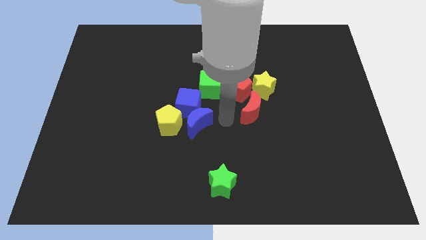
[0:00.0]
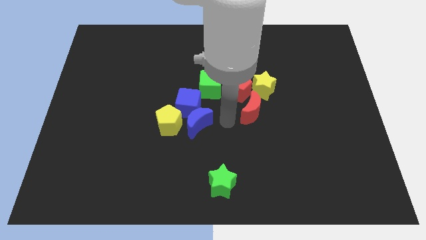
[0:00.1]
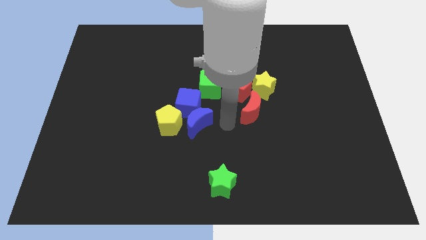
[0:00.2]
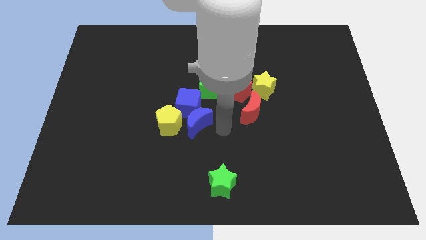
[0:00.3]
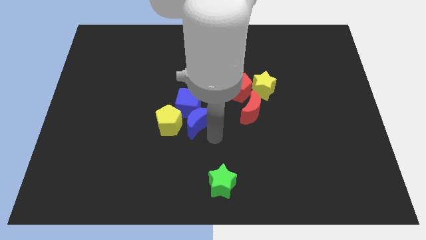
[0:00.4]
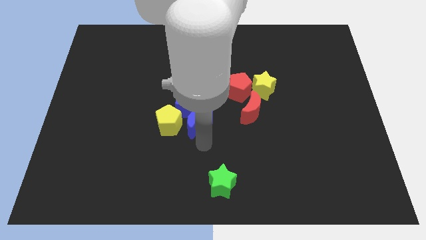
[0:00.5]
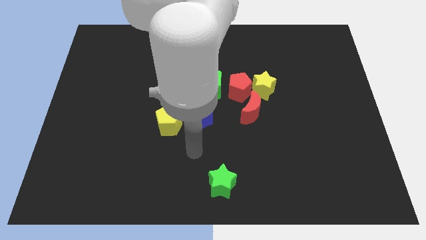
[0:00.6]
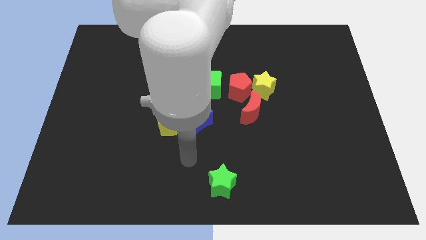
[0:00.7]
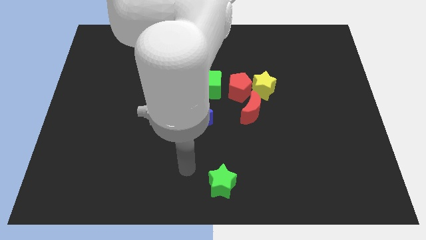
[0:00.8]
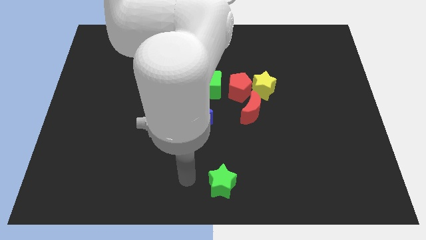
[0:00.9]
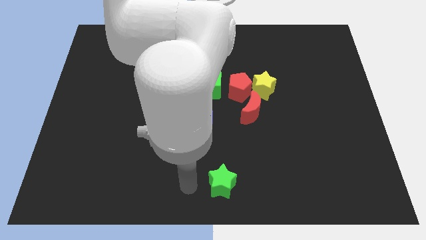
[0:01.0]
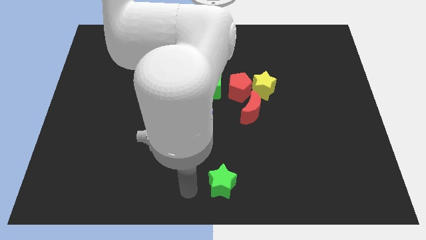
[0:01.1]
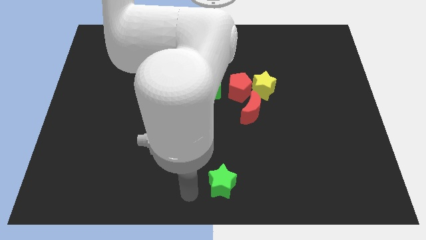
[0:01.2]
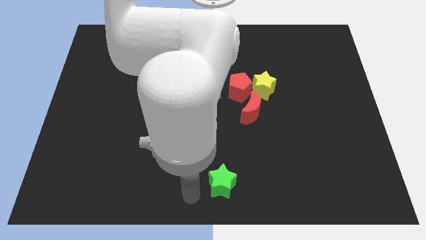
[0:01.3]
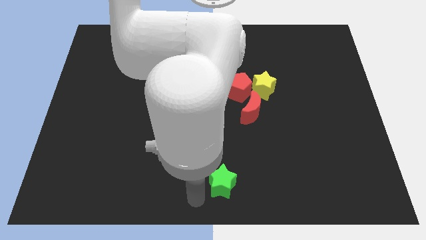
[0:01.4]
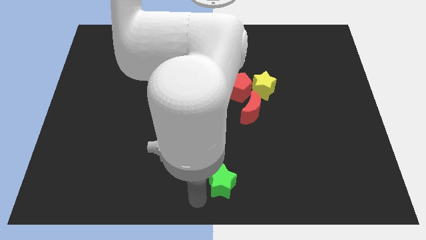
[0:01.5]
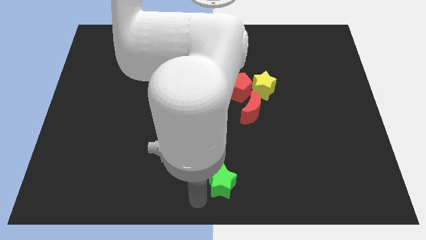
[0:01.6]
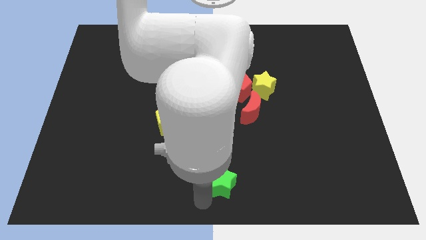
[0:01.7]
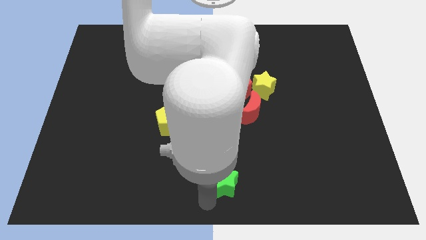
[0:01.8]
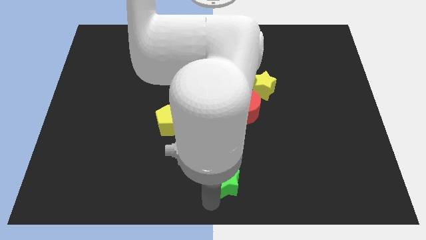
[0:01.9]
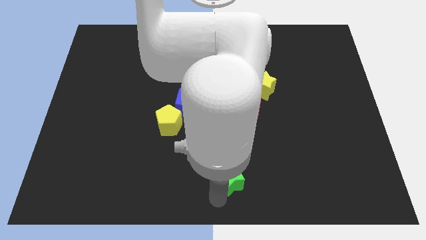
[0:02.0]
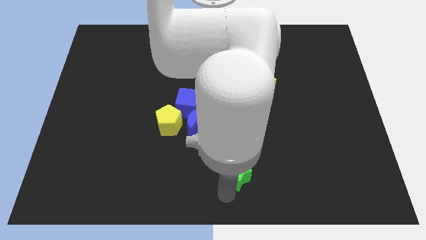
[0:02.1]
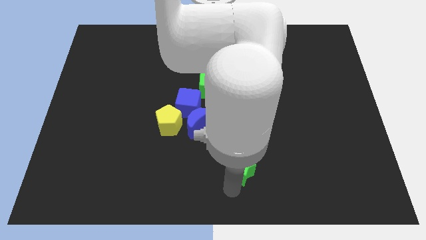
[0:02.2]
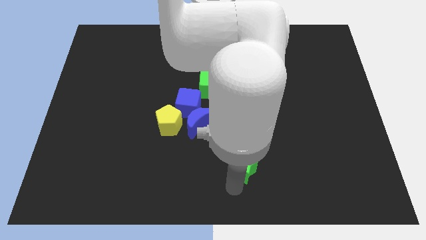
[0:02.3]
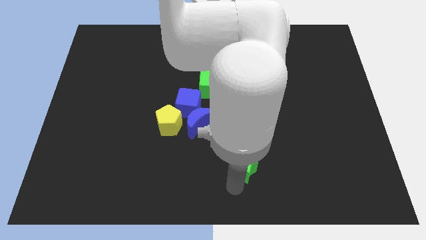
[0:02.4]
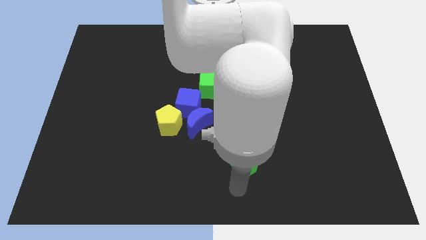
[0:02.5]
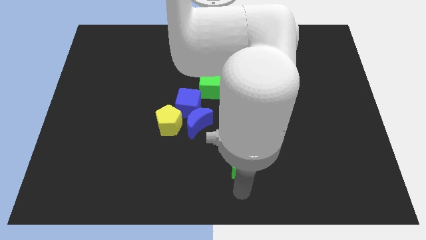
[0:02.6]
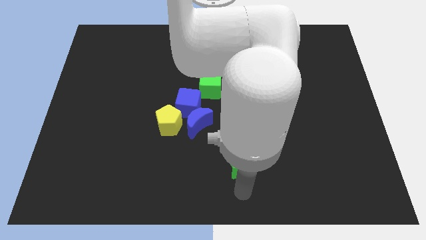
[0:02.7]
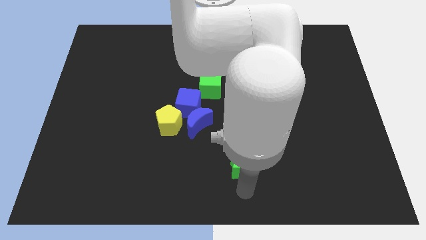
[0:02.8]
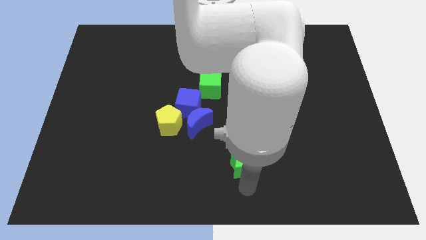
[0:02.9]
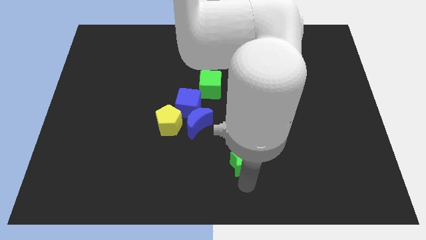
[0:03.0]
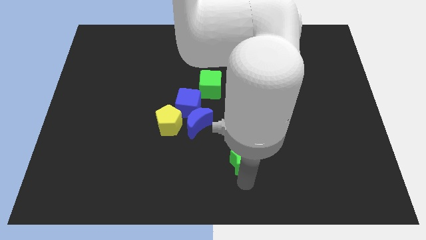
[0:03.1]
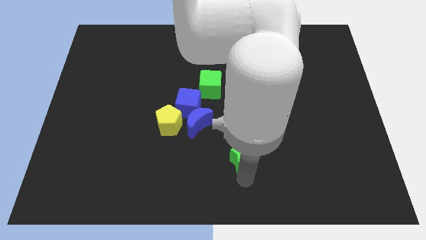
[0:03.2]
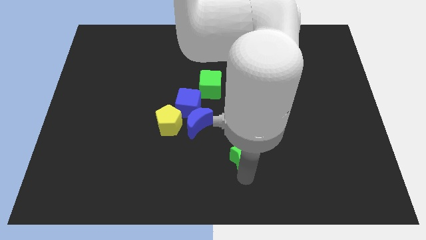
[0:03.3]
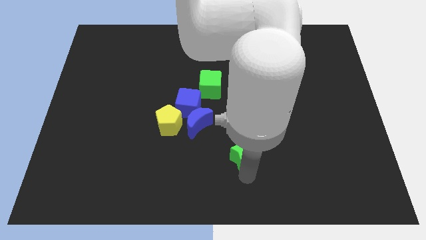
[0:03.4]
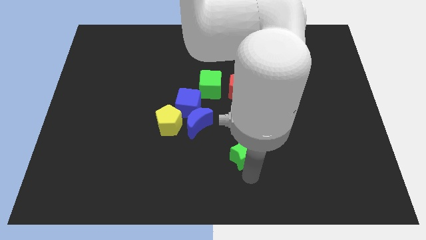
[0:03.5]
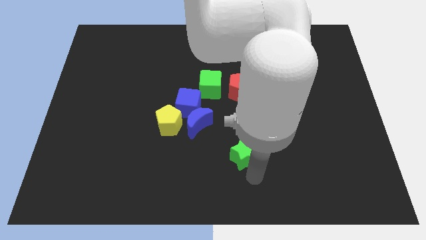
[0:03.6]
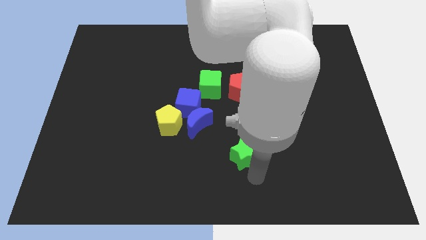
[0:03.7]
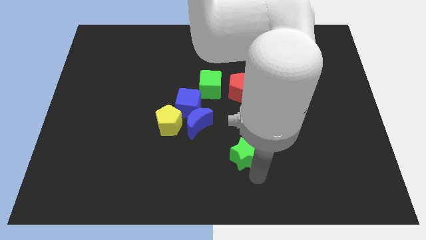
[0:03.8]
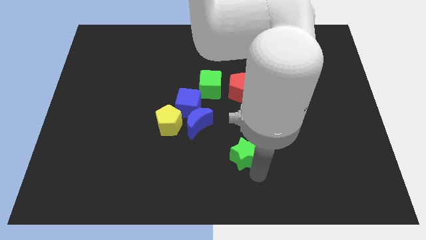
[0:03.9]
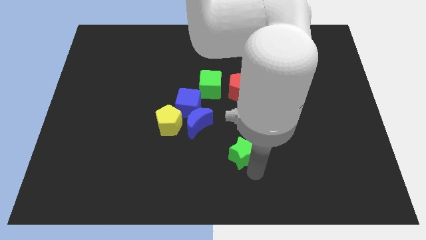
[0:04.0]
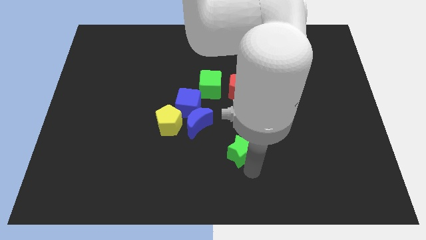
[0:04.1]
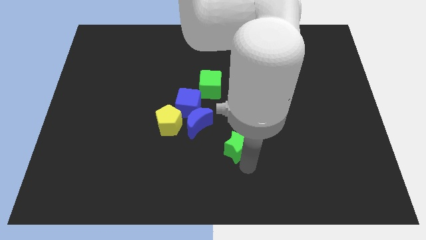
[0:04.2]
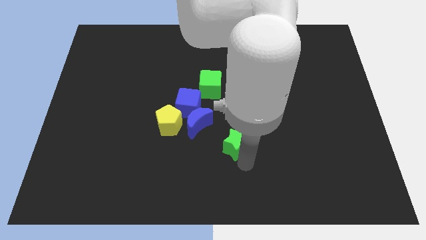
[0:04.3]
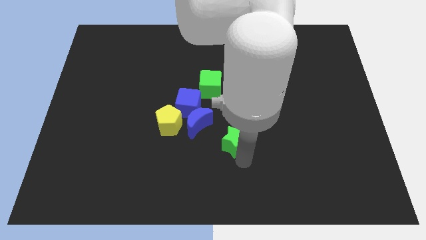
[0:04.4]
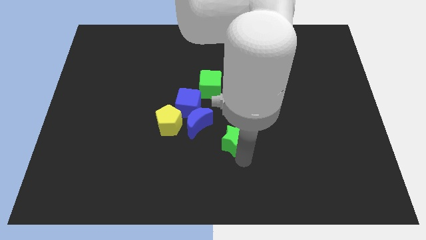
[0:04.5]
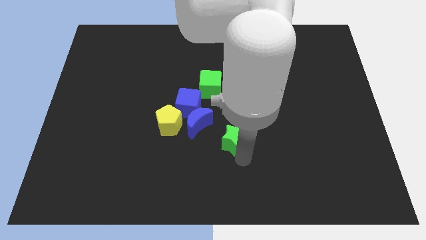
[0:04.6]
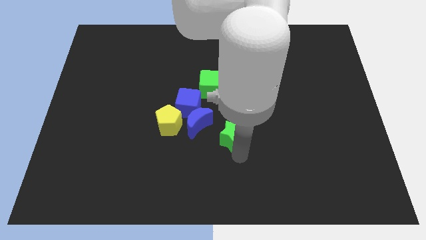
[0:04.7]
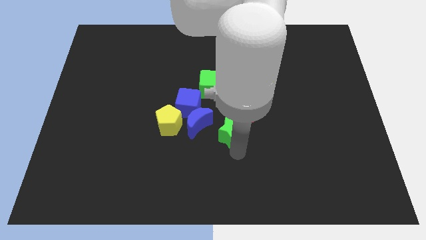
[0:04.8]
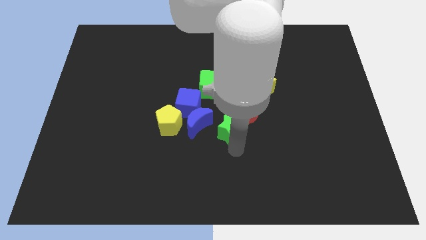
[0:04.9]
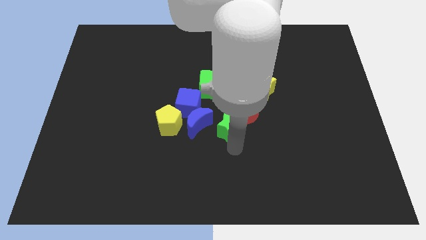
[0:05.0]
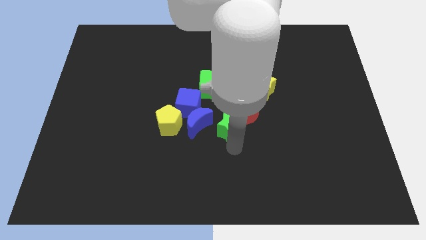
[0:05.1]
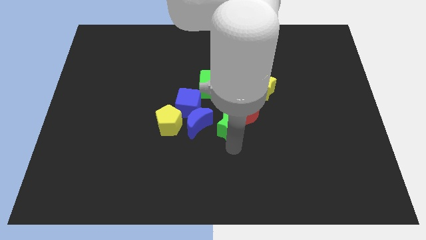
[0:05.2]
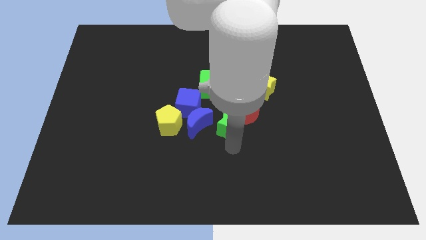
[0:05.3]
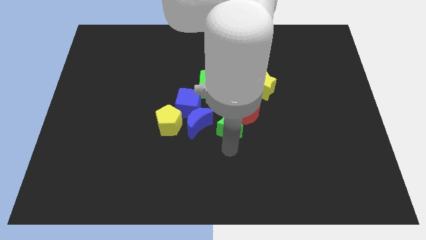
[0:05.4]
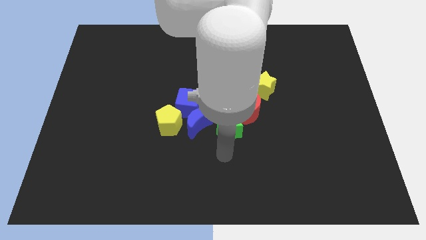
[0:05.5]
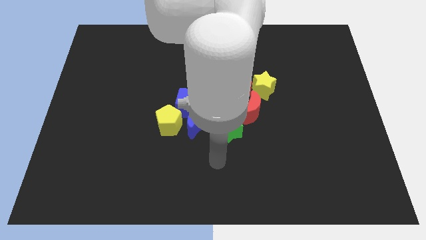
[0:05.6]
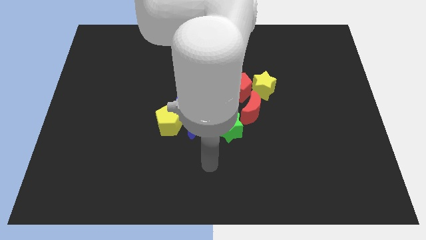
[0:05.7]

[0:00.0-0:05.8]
move the green star below the red crescent

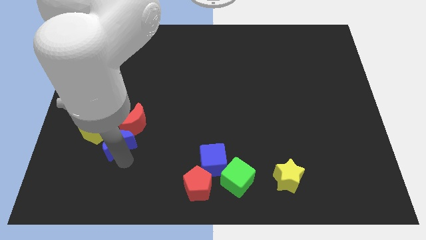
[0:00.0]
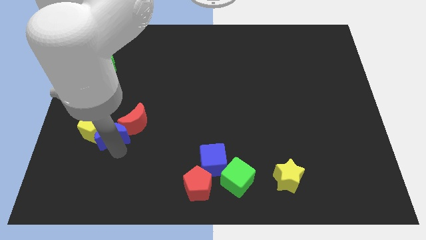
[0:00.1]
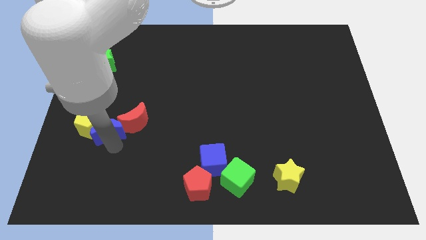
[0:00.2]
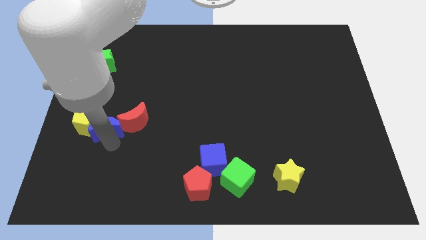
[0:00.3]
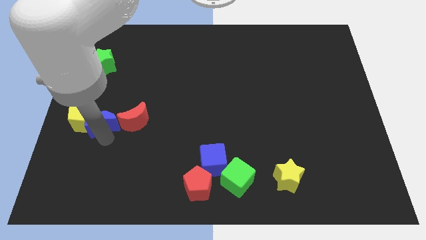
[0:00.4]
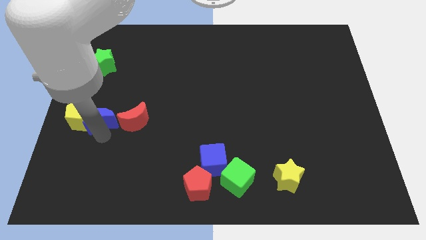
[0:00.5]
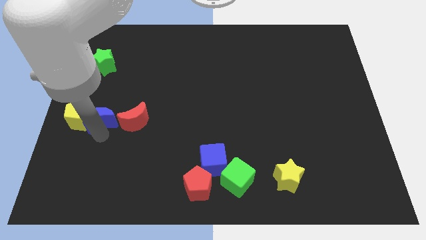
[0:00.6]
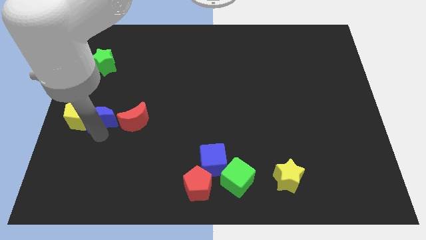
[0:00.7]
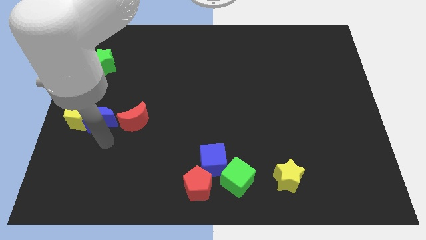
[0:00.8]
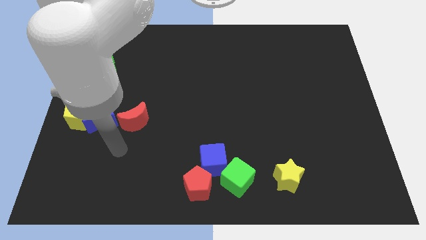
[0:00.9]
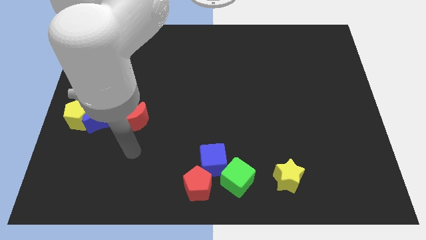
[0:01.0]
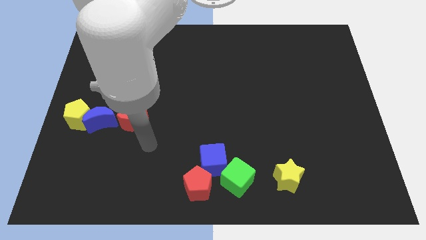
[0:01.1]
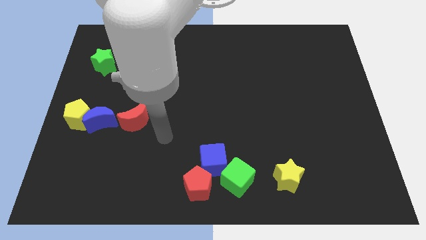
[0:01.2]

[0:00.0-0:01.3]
move the blue moon in between the red moon and yellow pentagon

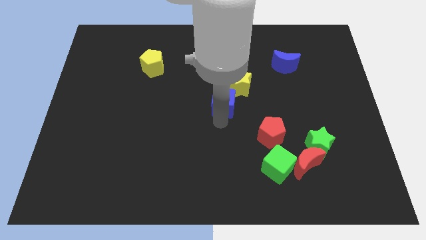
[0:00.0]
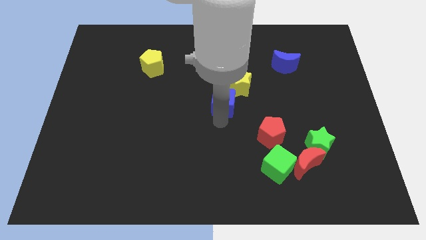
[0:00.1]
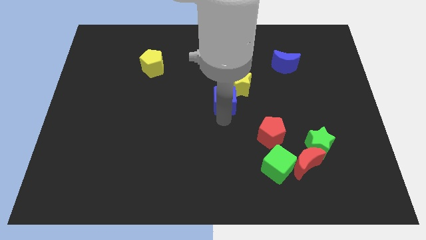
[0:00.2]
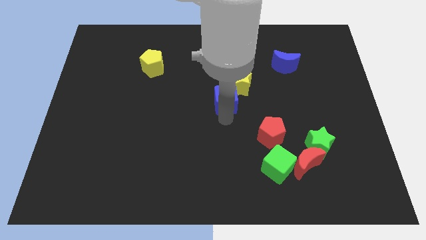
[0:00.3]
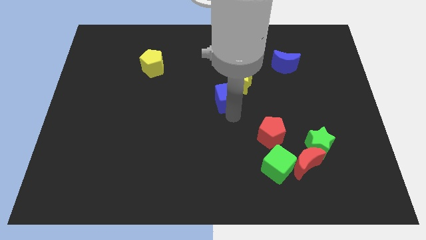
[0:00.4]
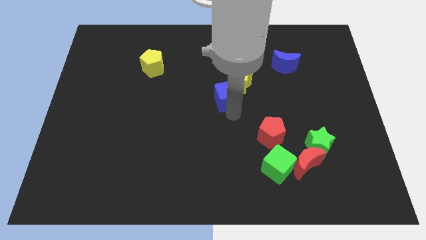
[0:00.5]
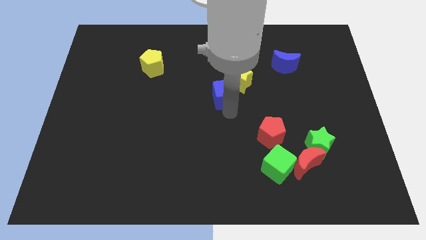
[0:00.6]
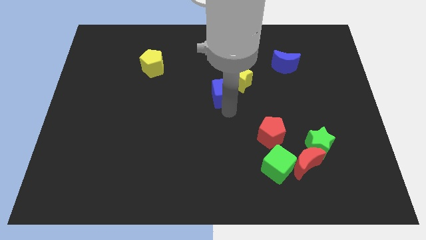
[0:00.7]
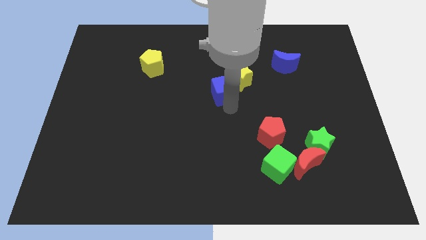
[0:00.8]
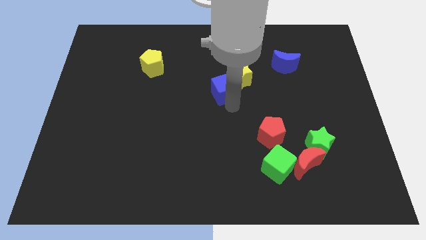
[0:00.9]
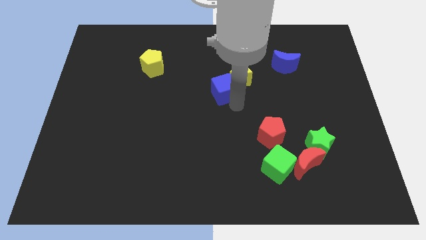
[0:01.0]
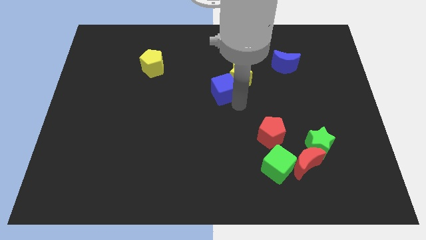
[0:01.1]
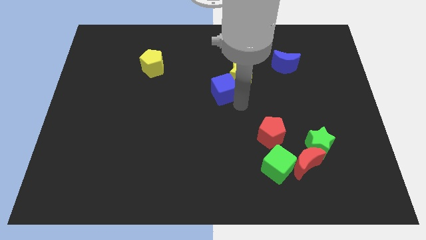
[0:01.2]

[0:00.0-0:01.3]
move the blue cube towards the top from the center

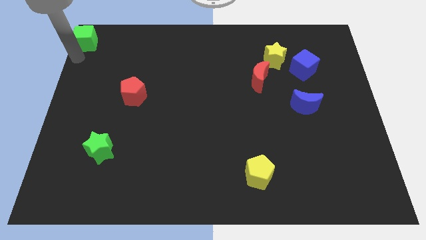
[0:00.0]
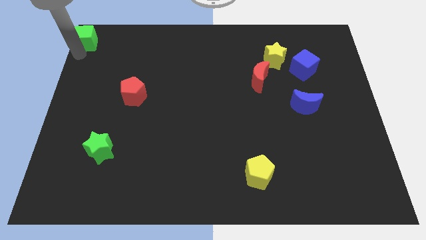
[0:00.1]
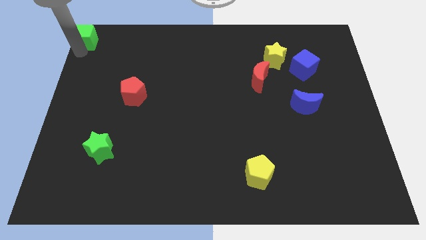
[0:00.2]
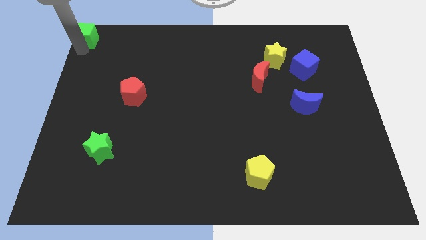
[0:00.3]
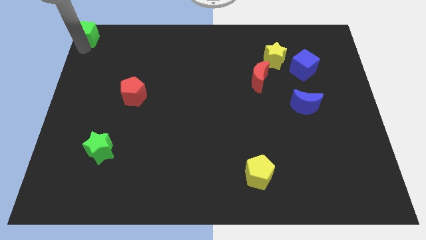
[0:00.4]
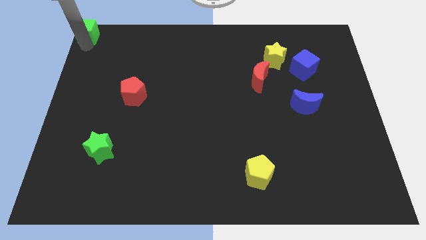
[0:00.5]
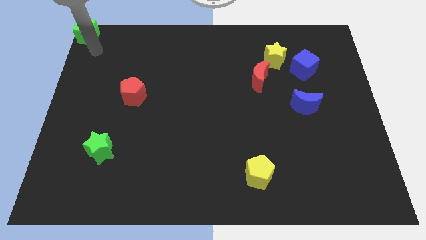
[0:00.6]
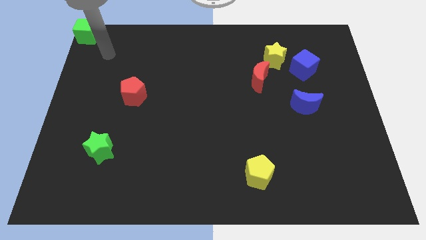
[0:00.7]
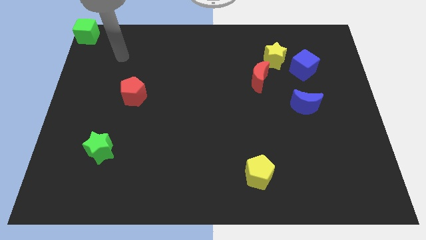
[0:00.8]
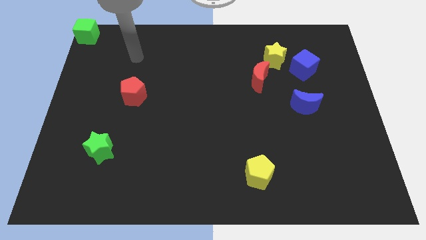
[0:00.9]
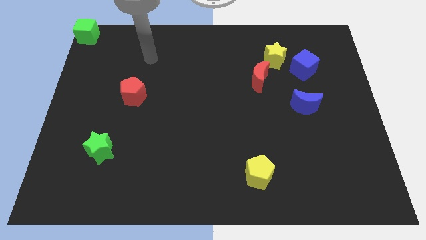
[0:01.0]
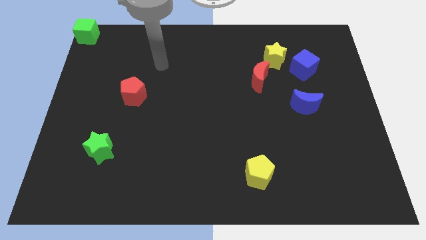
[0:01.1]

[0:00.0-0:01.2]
move arm towards middle corner of board
